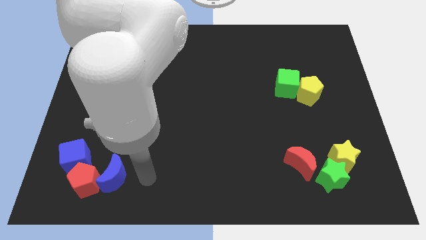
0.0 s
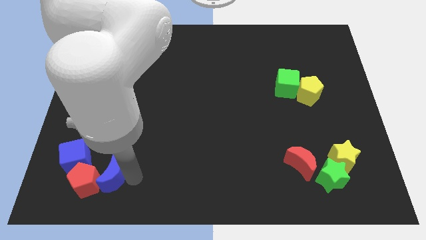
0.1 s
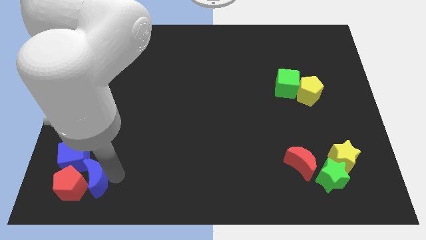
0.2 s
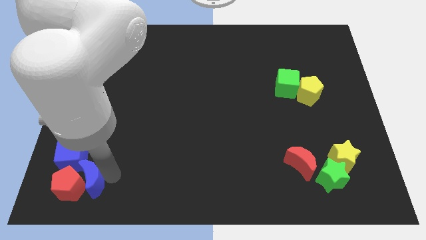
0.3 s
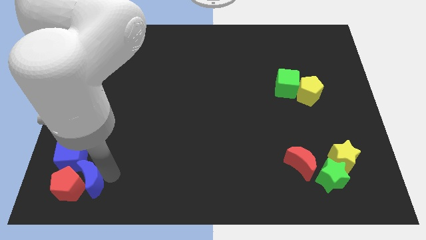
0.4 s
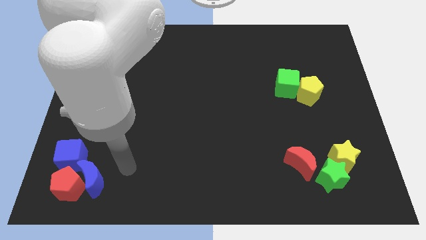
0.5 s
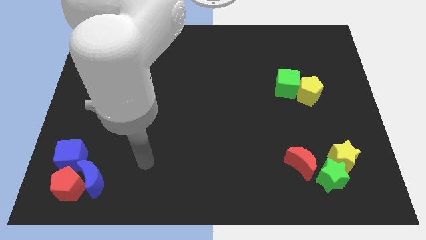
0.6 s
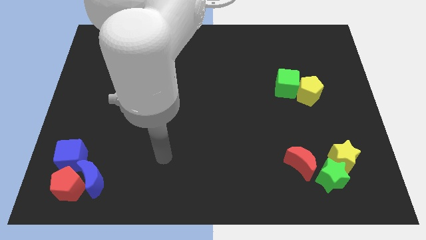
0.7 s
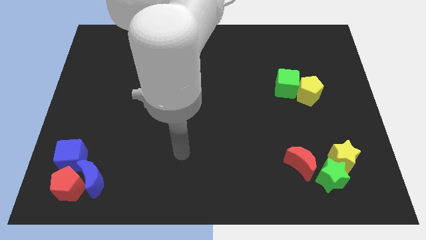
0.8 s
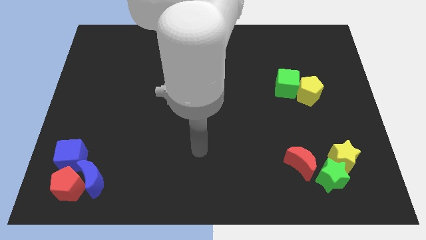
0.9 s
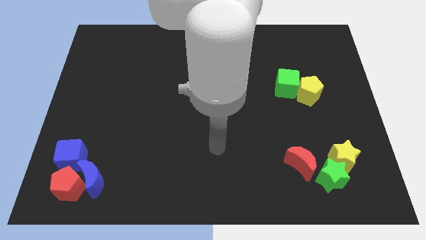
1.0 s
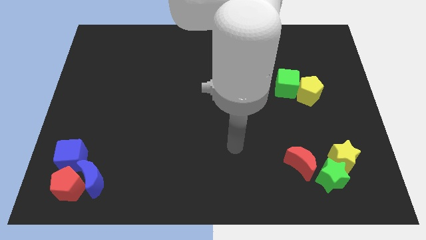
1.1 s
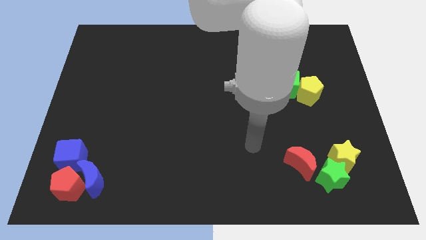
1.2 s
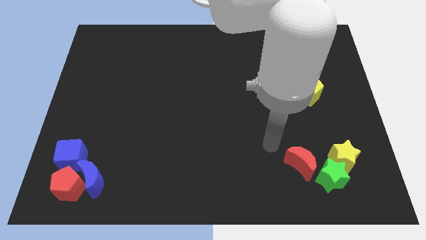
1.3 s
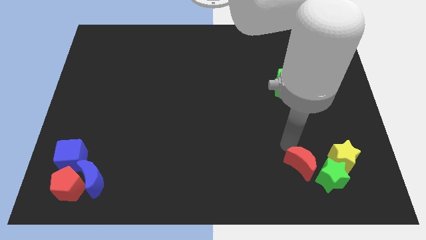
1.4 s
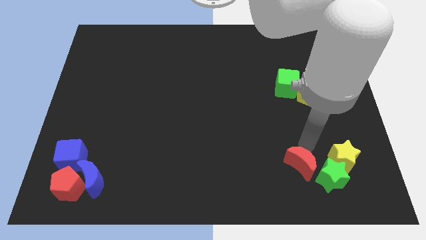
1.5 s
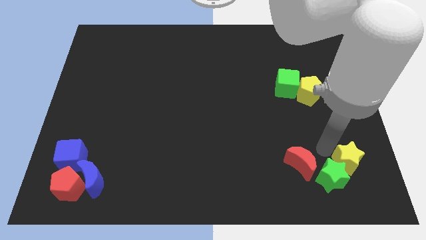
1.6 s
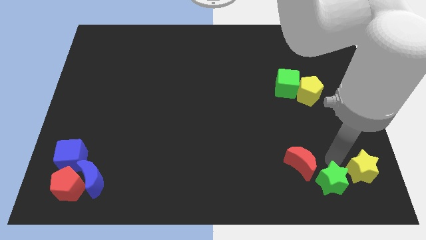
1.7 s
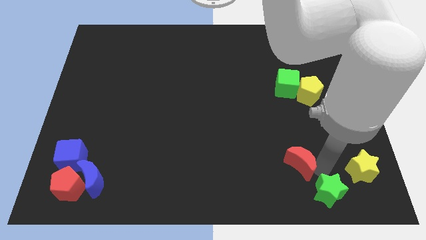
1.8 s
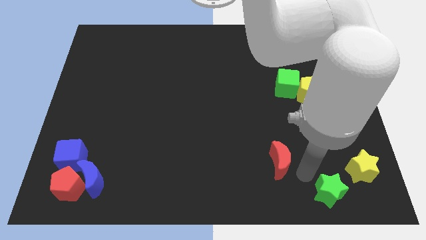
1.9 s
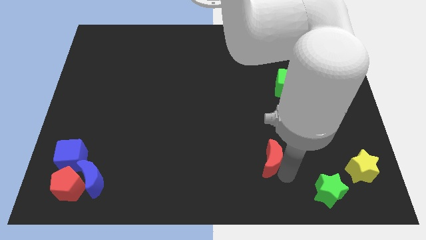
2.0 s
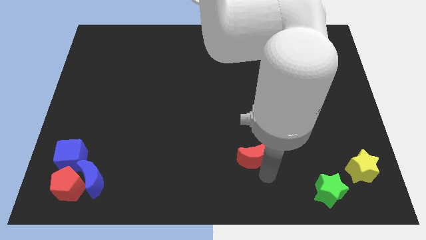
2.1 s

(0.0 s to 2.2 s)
move your arm from the blue moon to the red moon

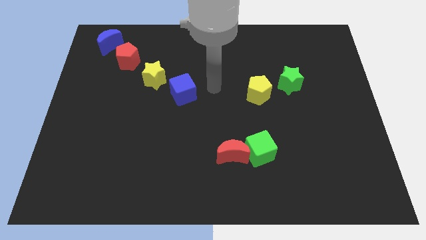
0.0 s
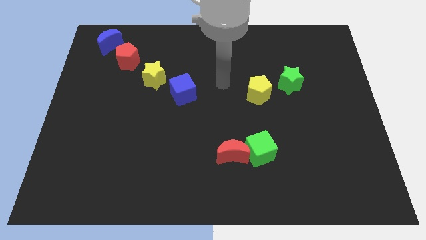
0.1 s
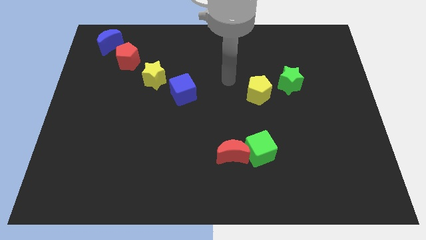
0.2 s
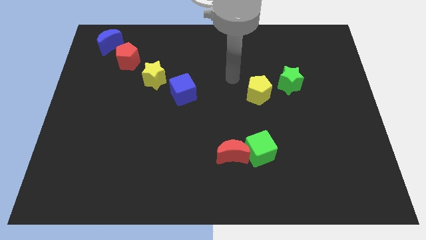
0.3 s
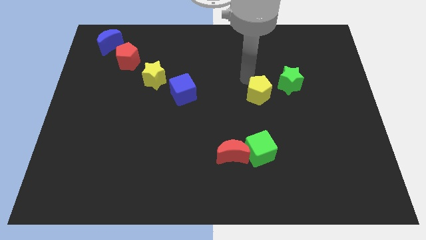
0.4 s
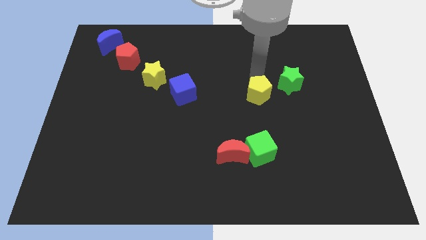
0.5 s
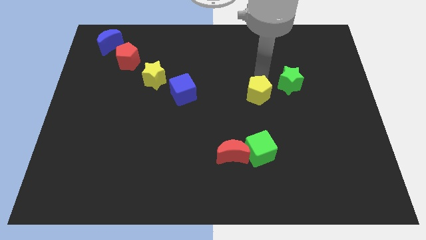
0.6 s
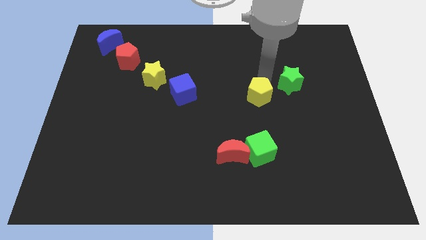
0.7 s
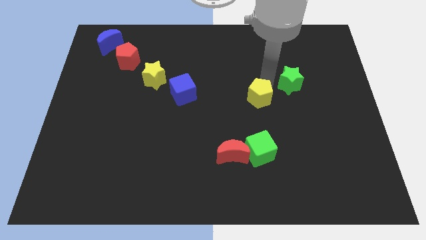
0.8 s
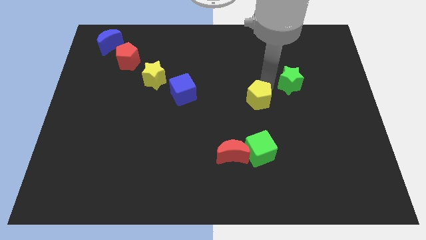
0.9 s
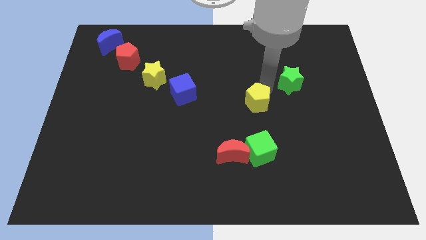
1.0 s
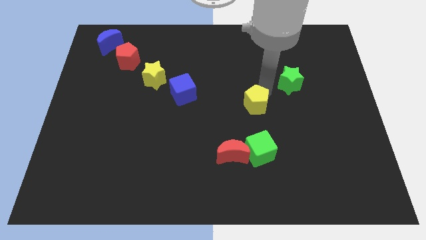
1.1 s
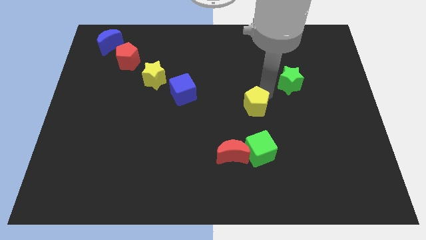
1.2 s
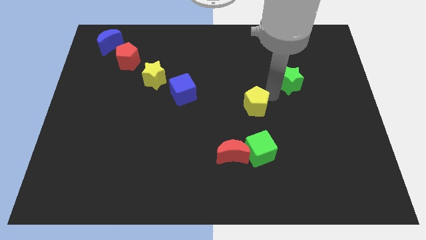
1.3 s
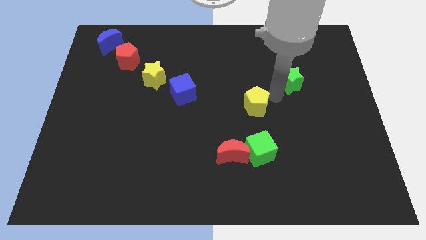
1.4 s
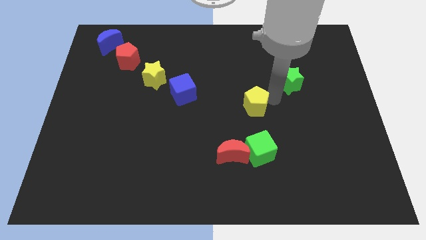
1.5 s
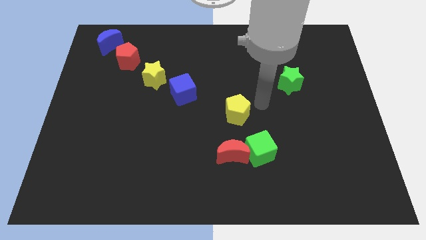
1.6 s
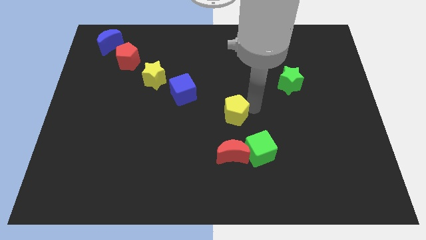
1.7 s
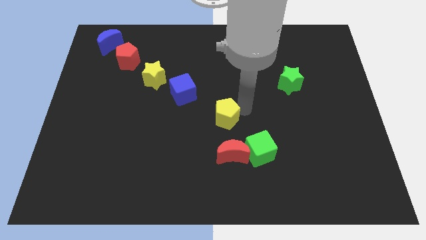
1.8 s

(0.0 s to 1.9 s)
place the yellow pentagon above the red crescent

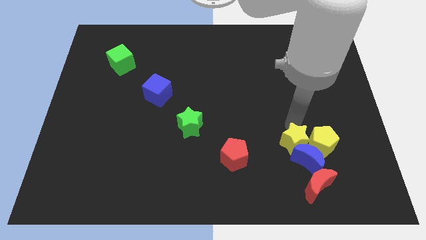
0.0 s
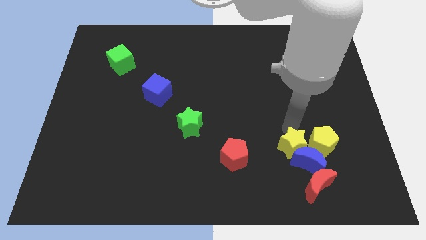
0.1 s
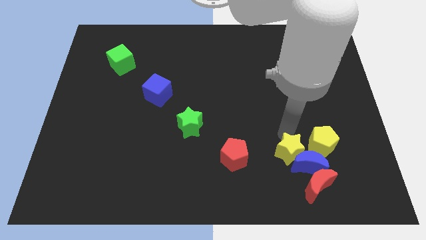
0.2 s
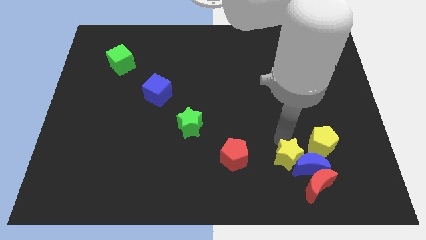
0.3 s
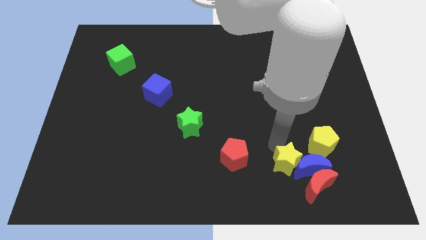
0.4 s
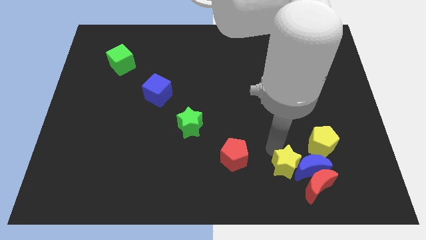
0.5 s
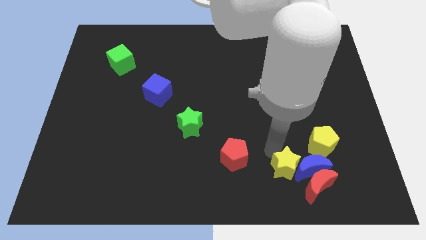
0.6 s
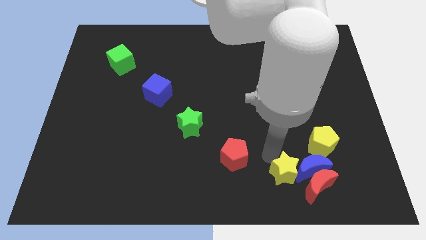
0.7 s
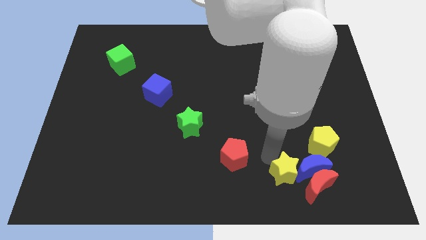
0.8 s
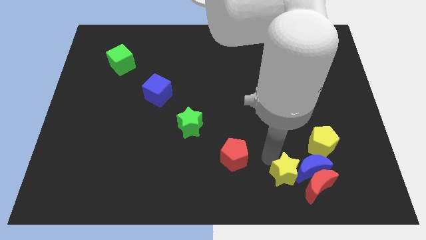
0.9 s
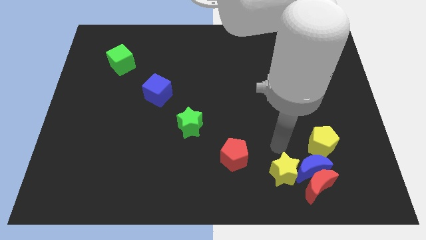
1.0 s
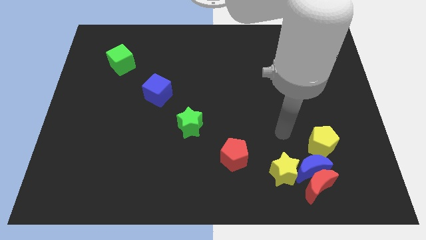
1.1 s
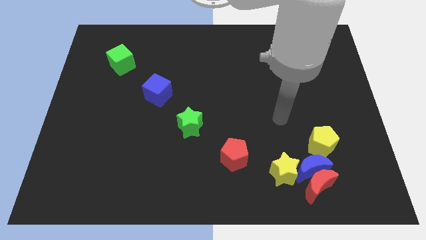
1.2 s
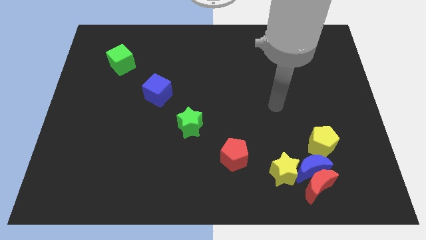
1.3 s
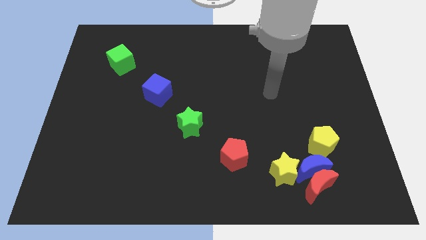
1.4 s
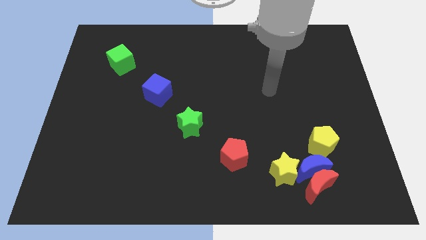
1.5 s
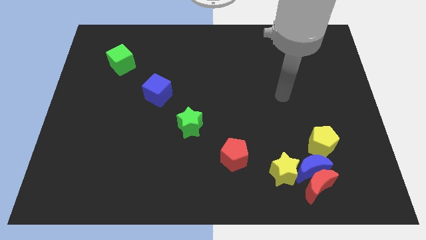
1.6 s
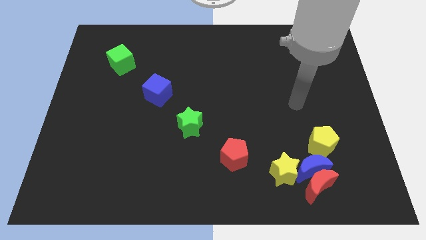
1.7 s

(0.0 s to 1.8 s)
push the yellow star to the left of the blue crescent

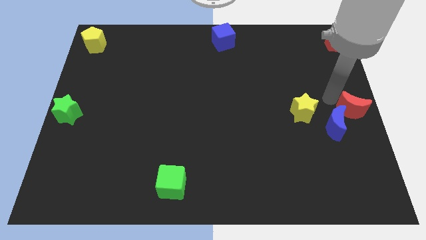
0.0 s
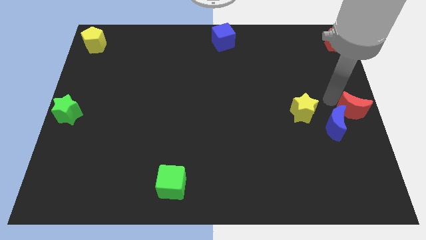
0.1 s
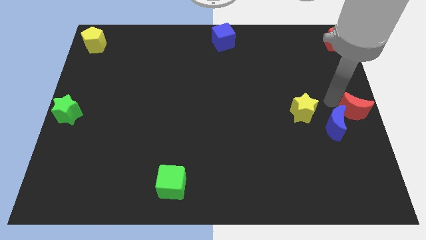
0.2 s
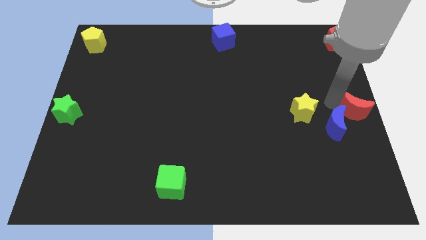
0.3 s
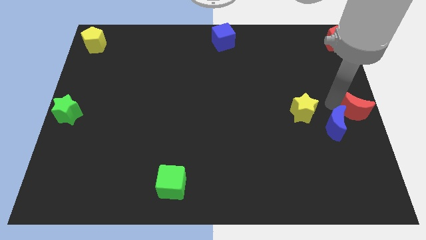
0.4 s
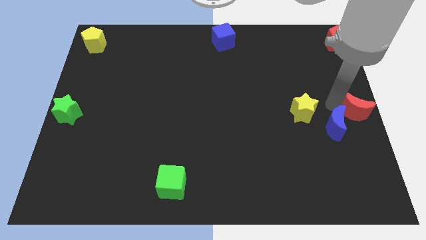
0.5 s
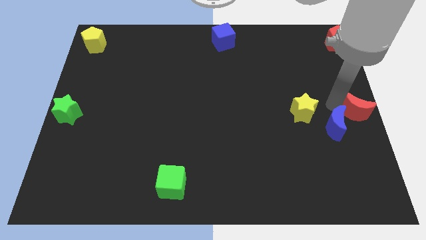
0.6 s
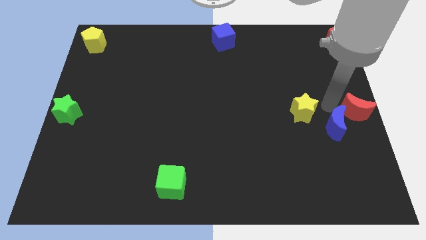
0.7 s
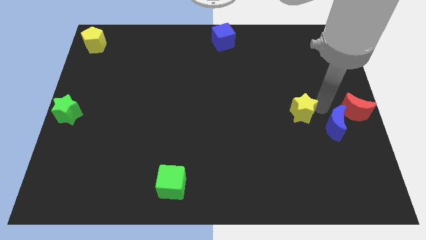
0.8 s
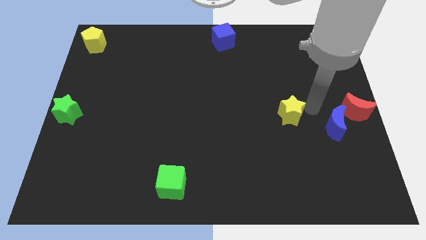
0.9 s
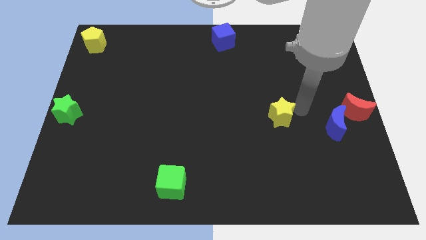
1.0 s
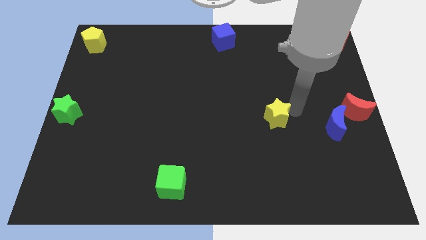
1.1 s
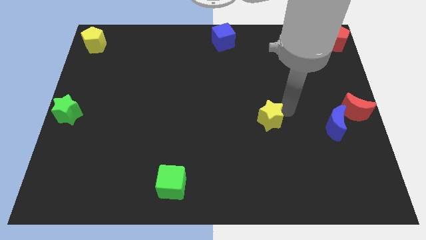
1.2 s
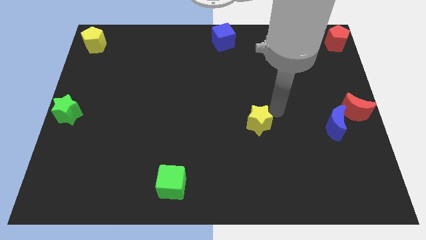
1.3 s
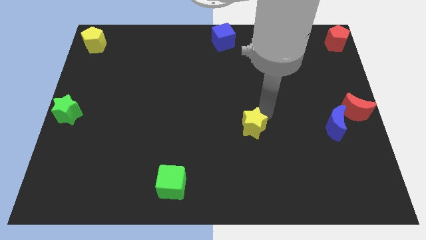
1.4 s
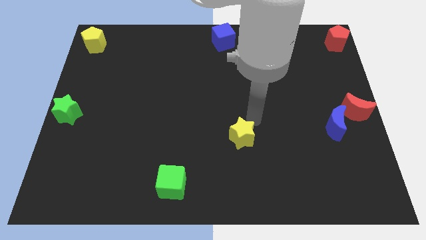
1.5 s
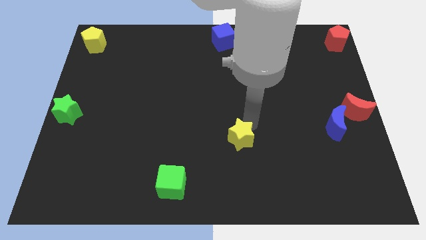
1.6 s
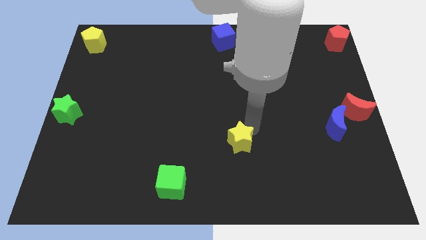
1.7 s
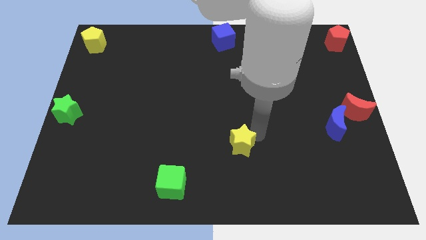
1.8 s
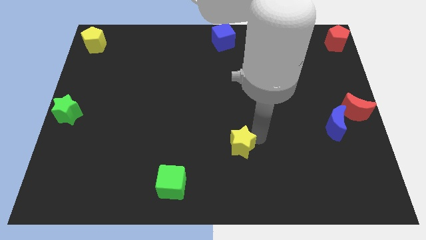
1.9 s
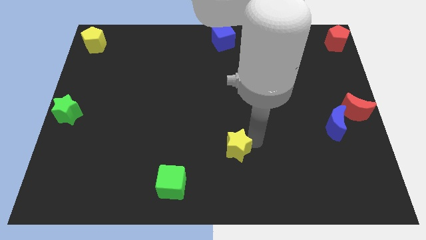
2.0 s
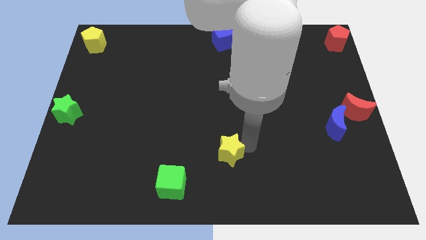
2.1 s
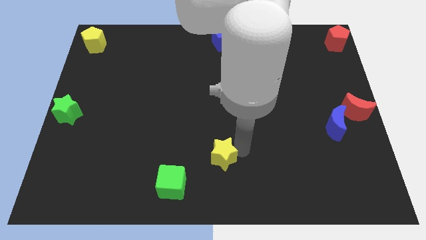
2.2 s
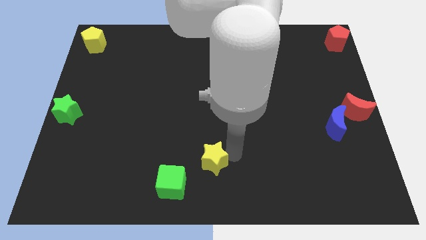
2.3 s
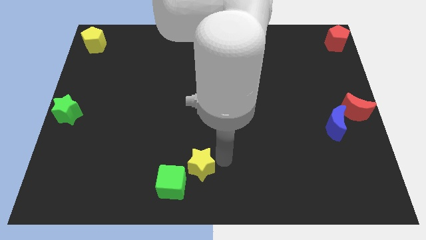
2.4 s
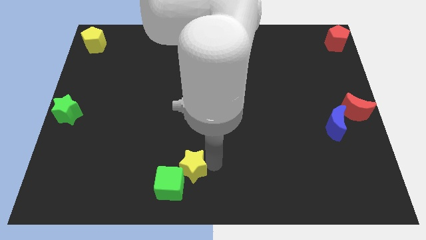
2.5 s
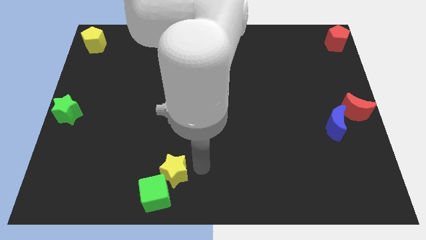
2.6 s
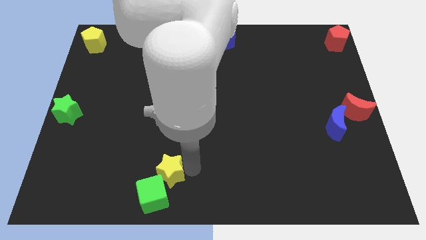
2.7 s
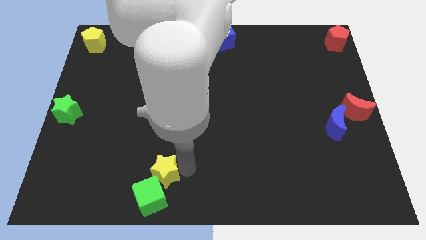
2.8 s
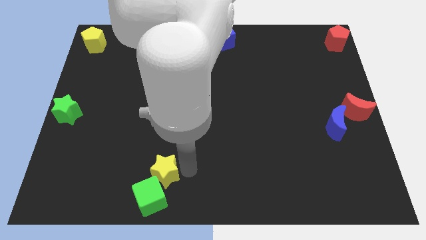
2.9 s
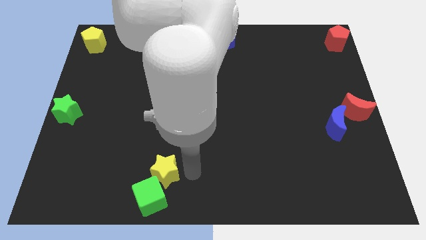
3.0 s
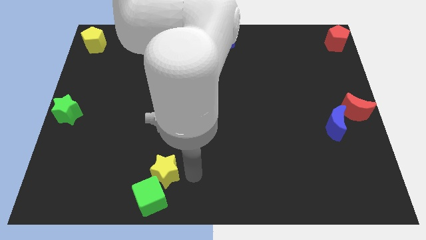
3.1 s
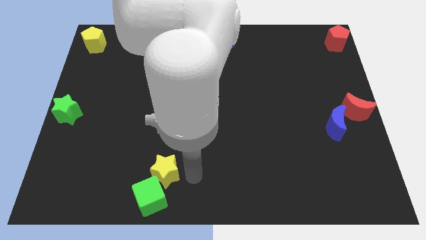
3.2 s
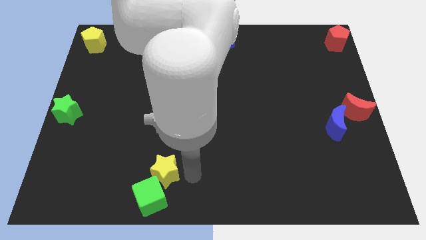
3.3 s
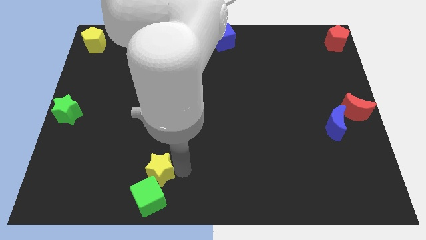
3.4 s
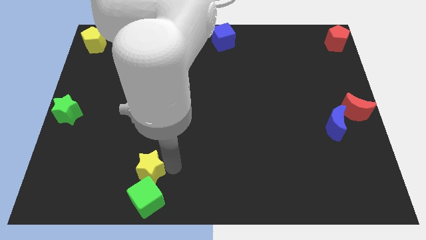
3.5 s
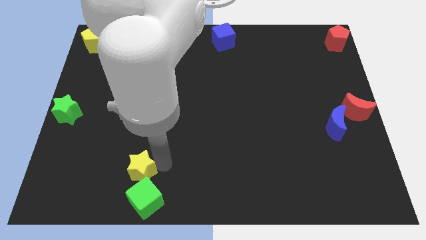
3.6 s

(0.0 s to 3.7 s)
drag yellow star towards green cube
